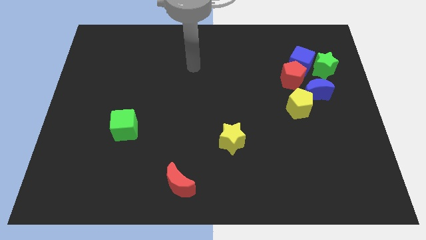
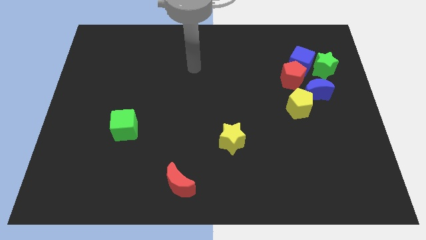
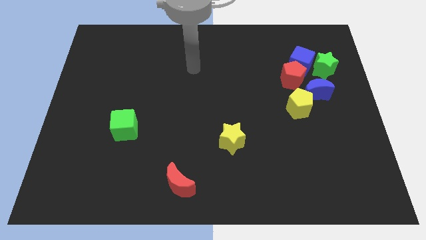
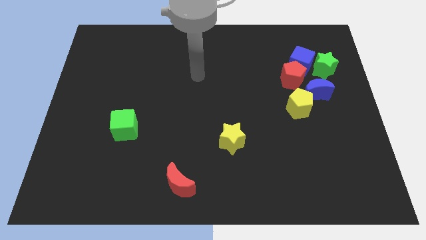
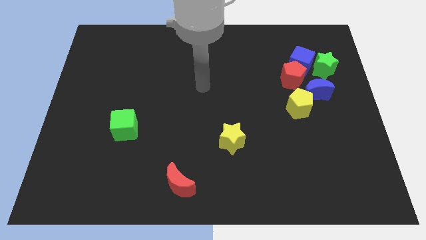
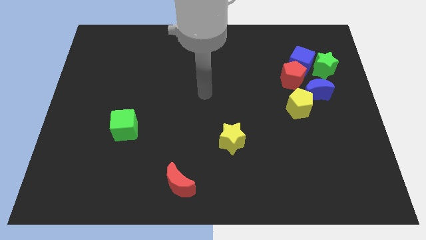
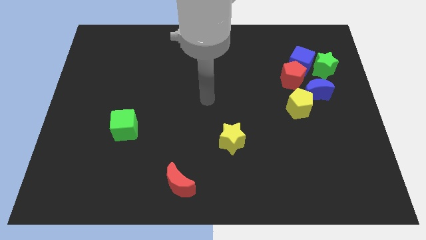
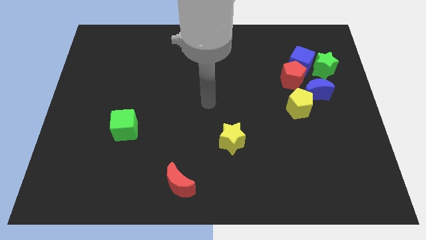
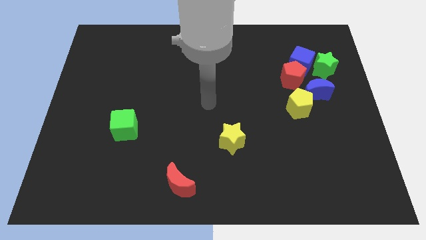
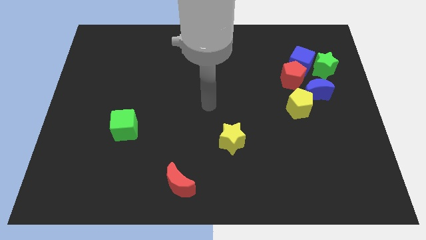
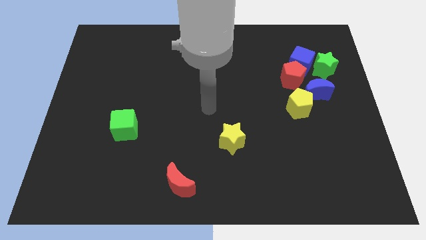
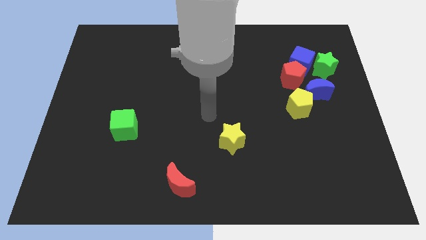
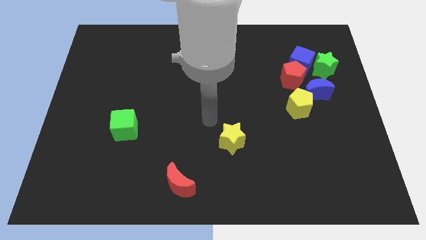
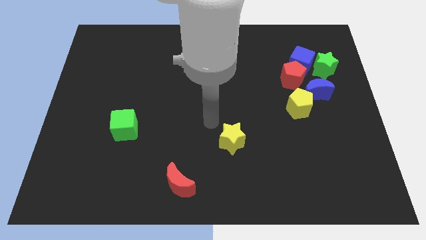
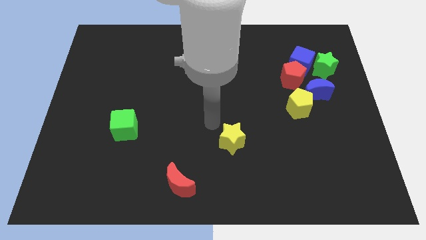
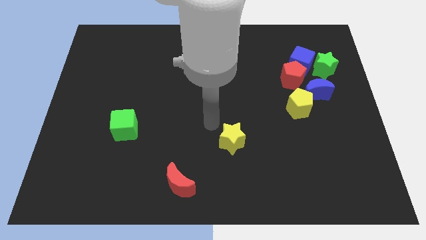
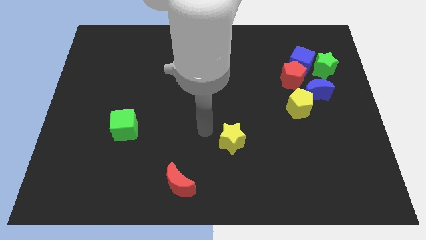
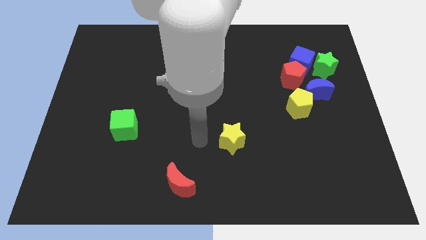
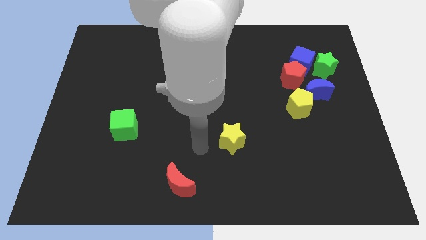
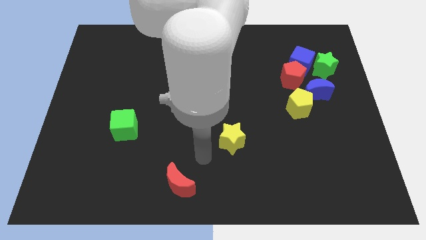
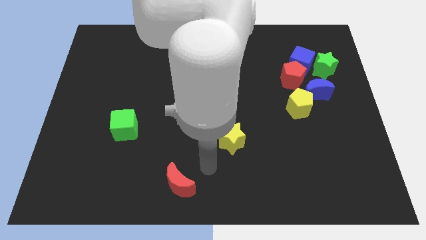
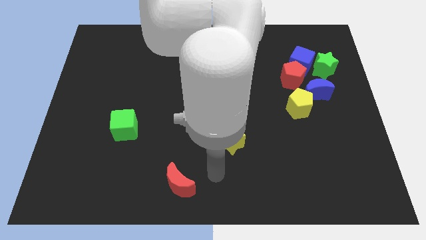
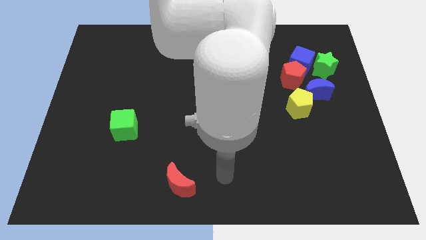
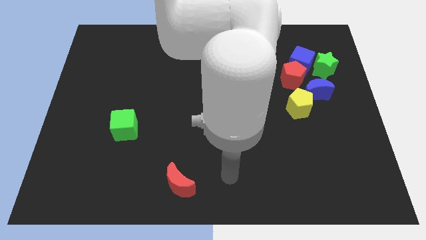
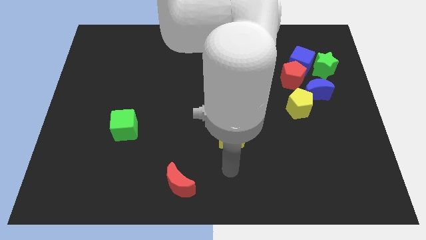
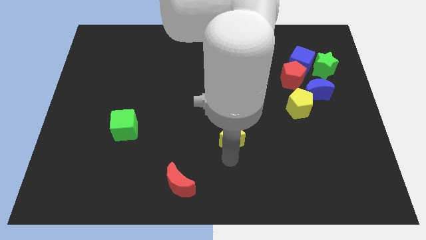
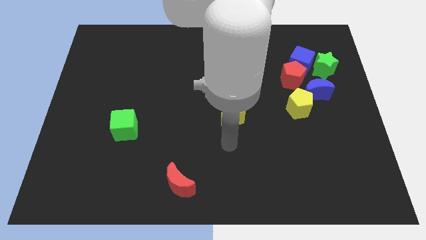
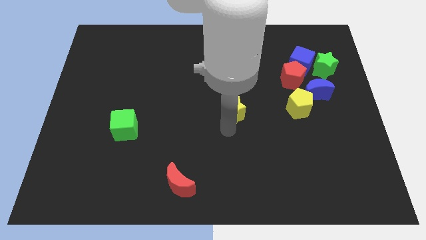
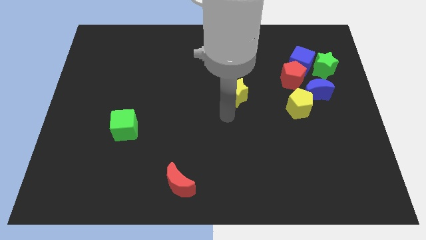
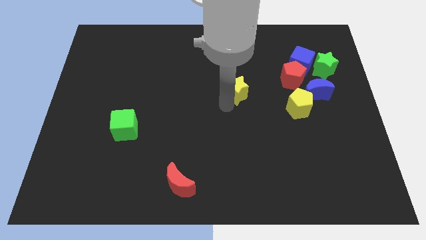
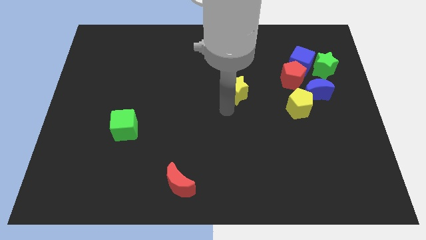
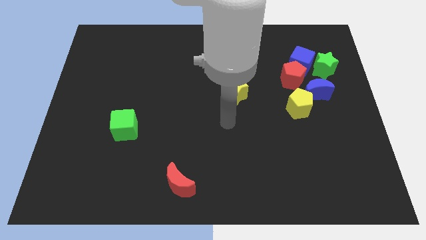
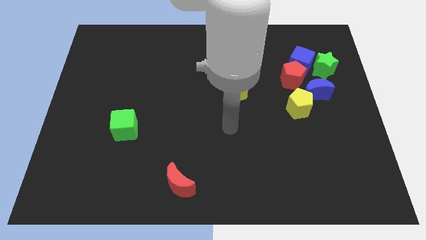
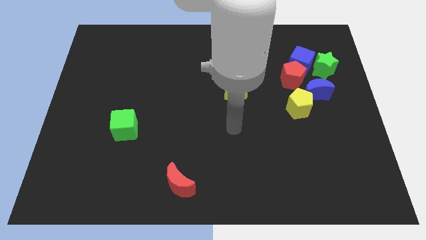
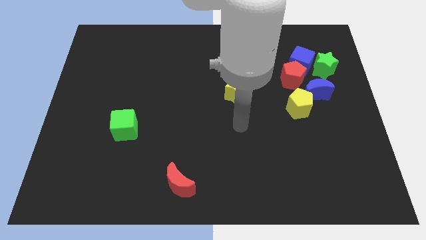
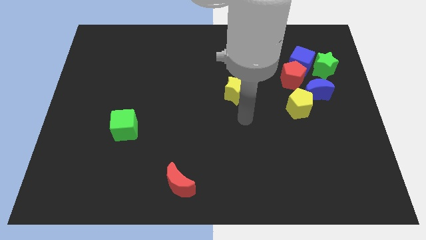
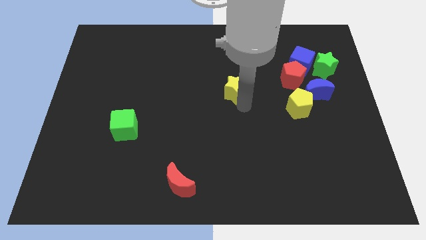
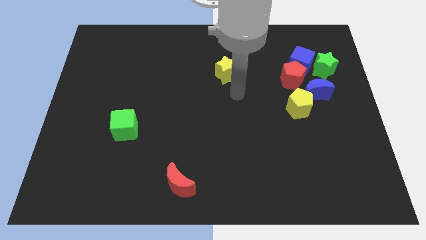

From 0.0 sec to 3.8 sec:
push the yellow star to the left of red pentagon

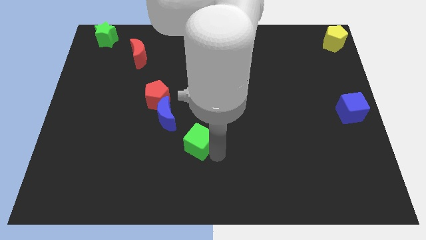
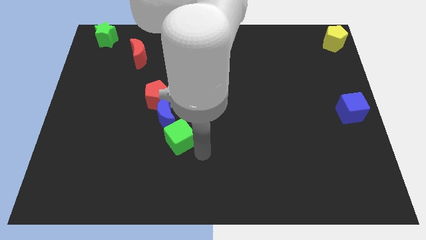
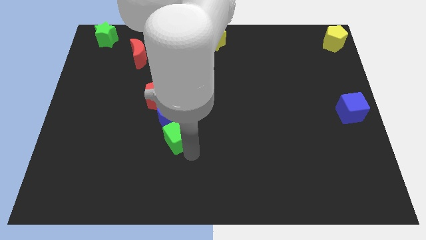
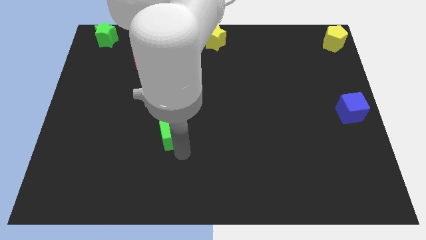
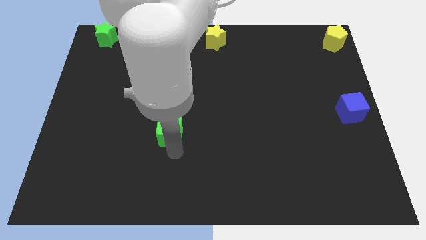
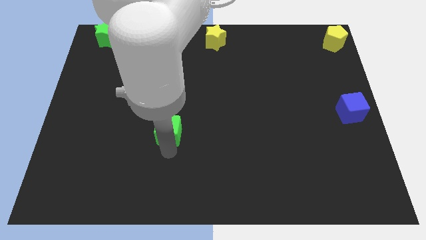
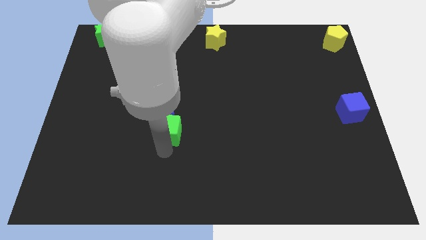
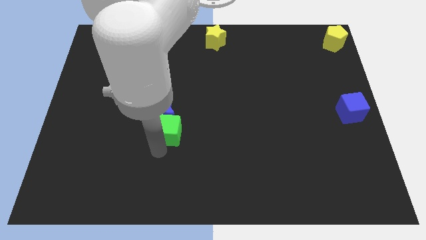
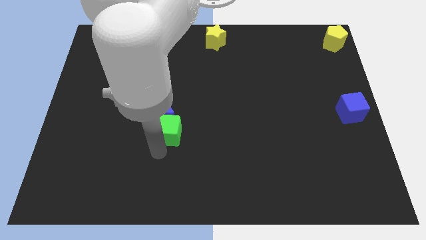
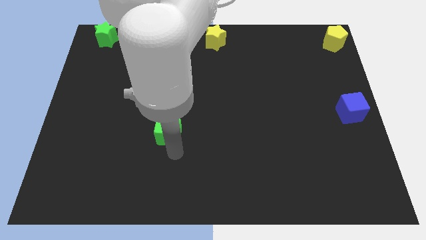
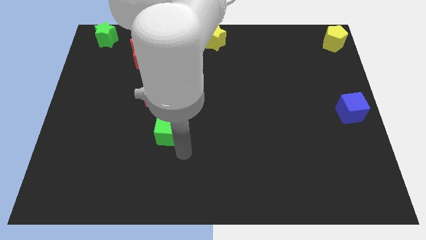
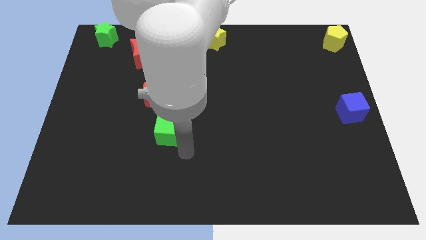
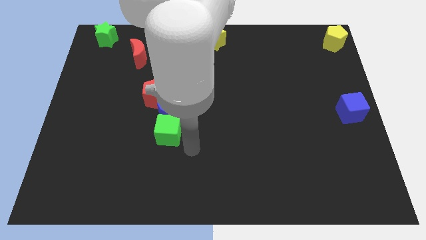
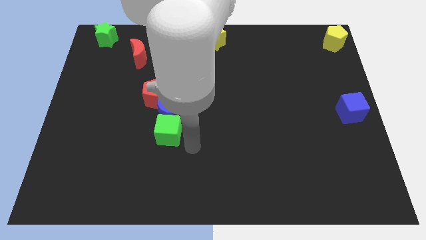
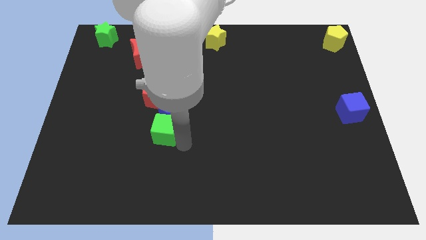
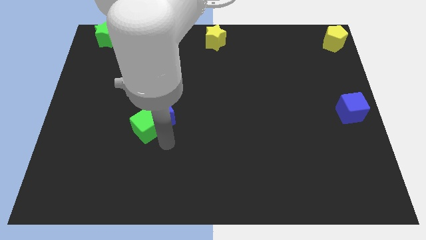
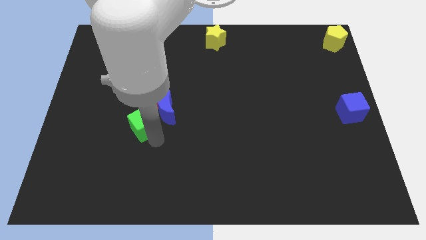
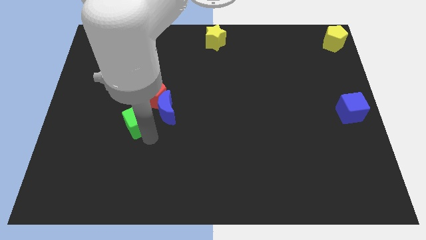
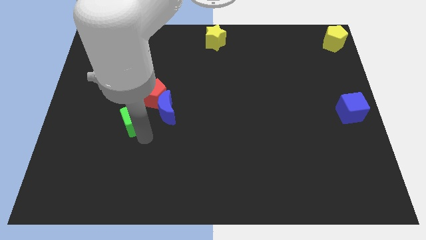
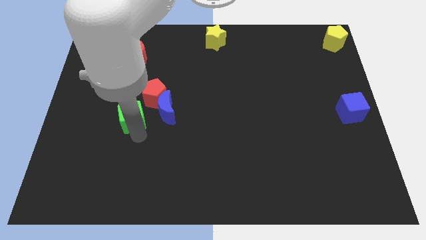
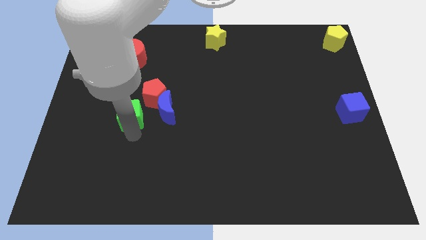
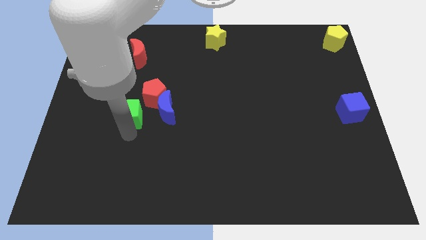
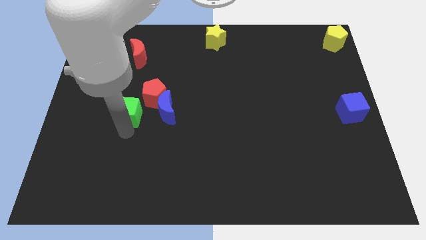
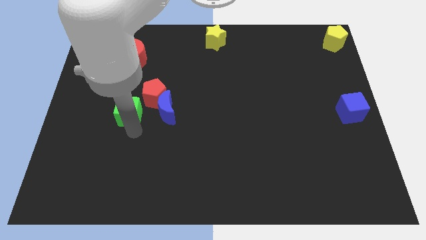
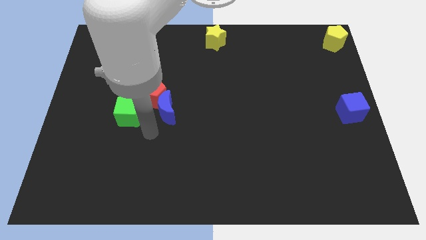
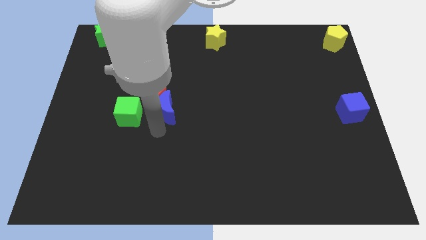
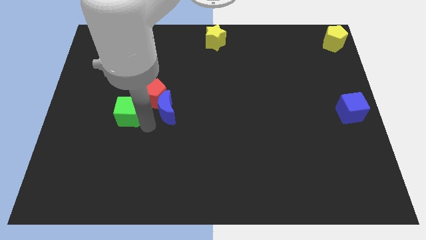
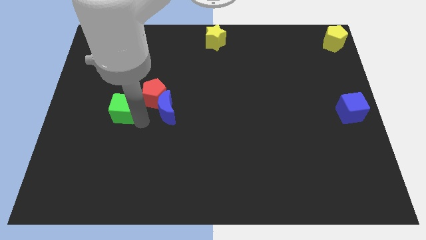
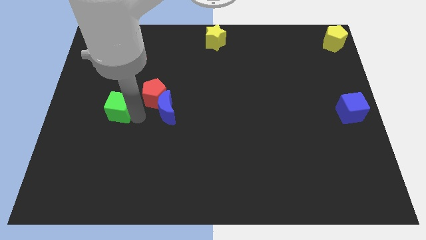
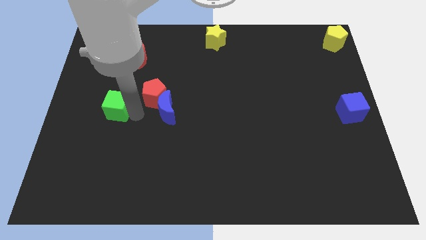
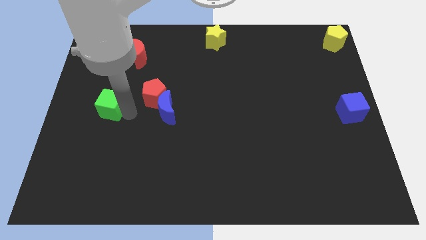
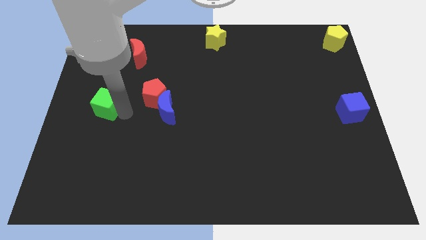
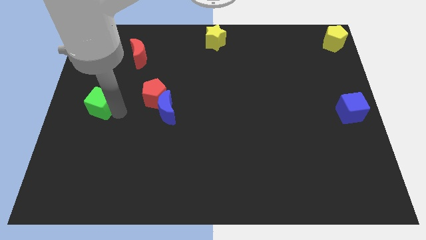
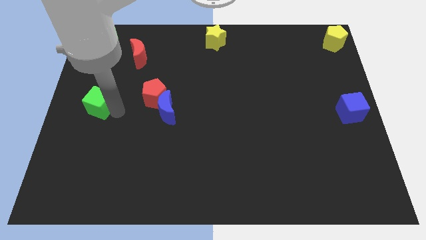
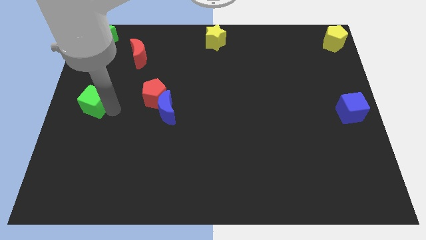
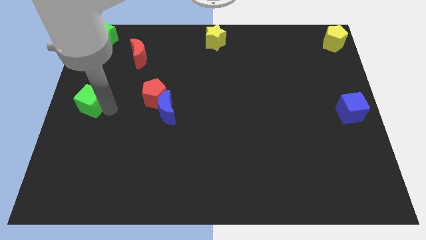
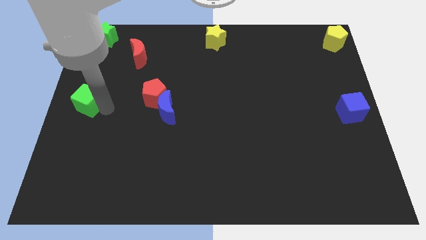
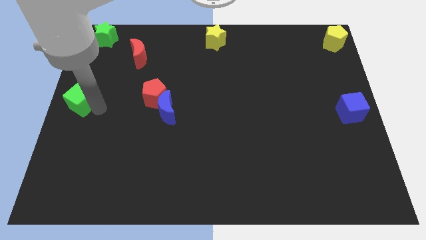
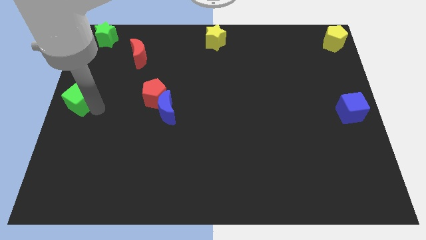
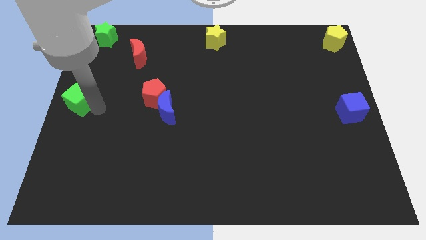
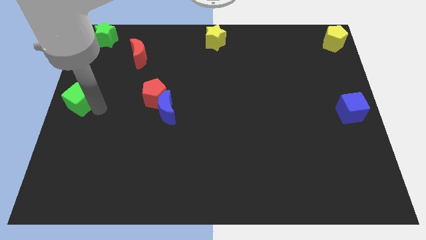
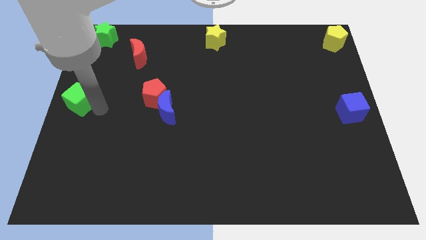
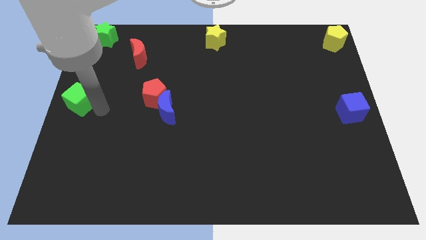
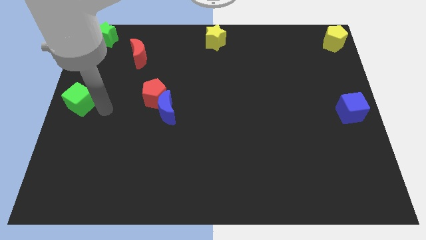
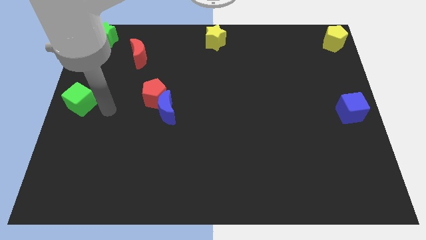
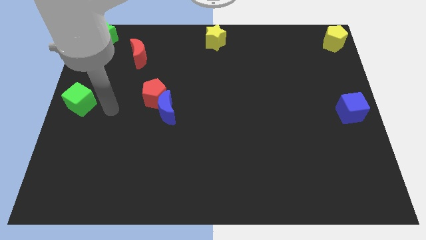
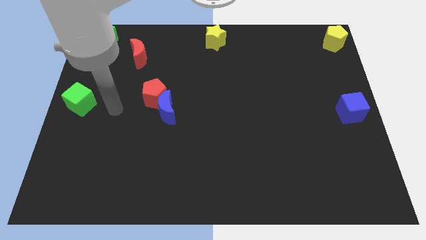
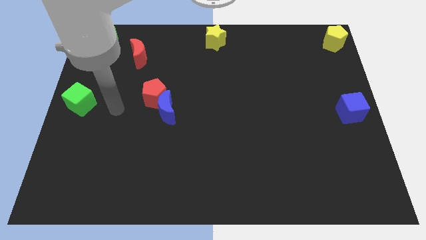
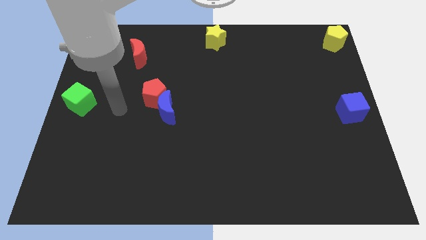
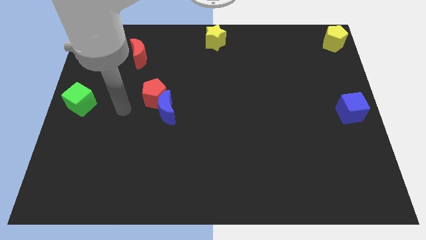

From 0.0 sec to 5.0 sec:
place the green cube horizontally to the left side of the red pentagon

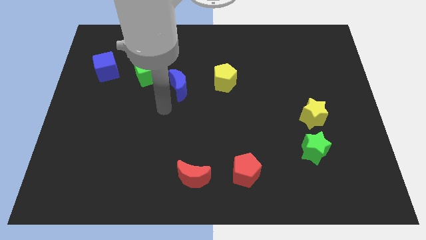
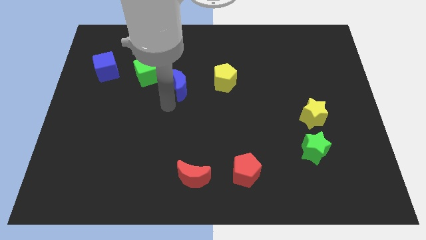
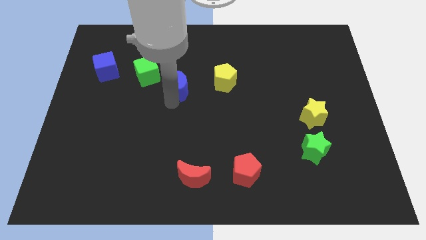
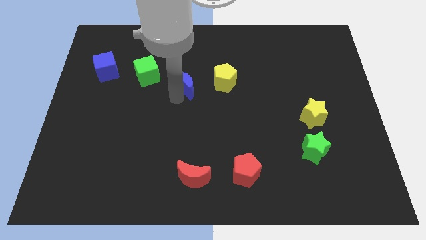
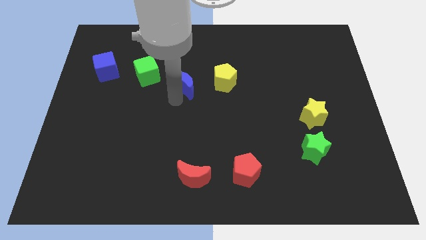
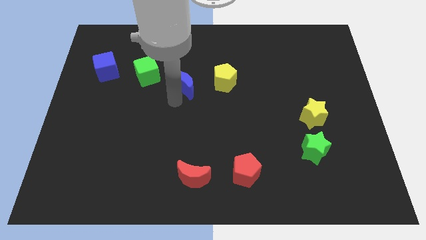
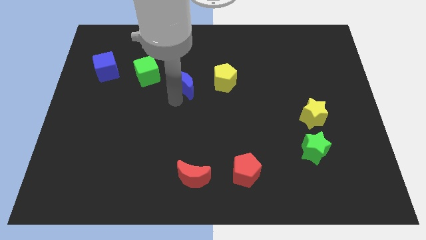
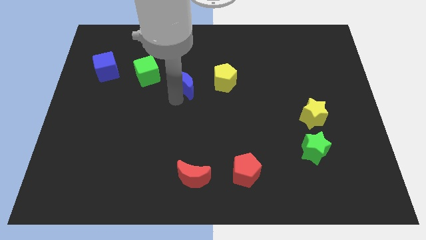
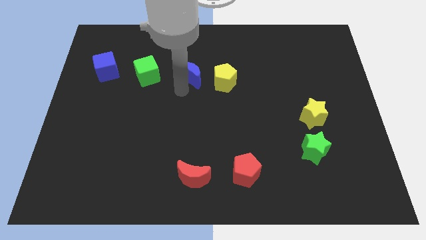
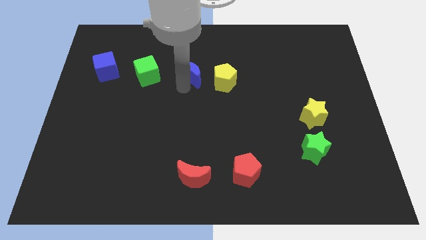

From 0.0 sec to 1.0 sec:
place blue crescent beside green cube
